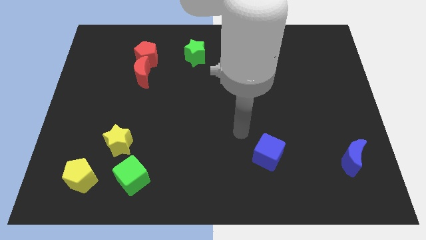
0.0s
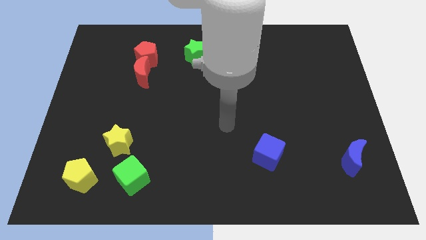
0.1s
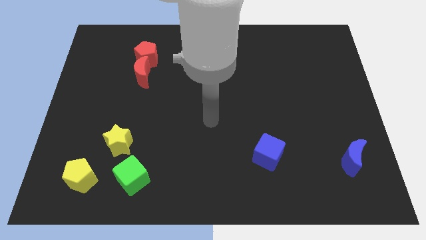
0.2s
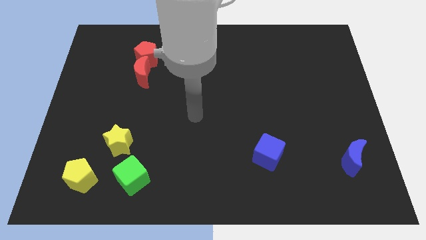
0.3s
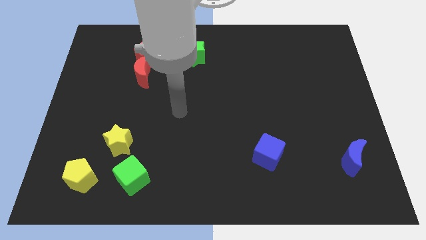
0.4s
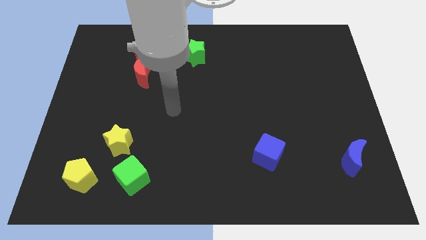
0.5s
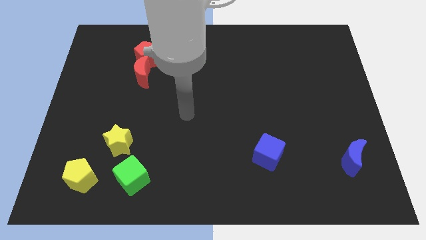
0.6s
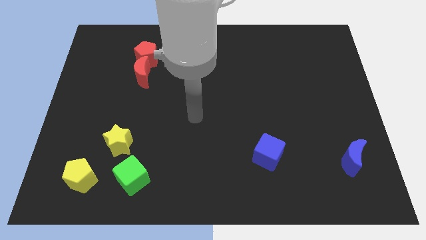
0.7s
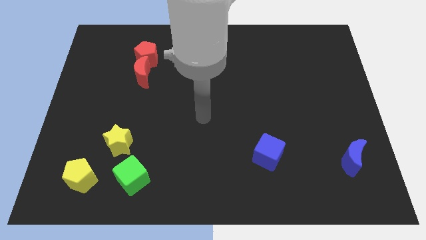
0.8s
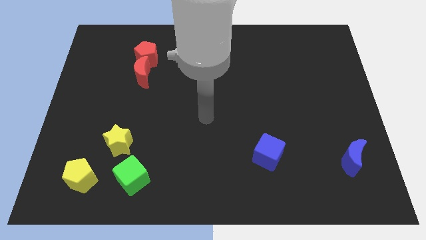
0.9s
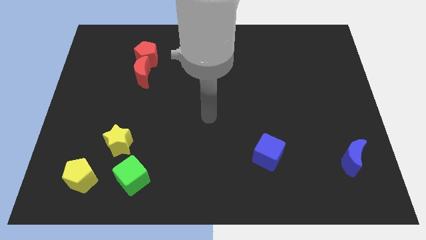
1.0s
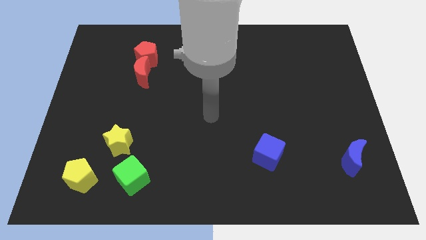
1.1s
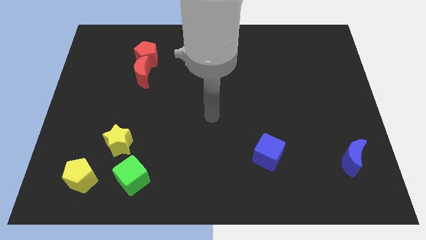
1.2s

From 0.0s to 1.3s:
place your arm at the center of the board

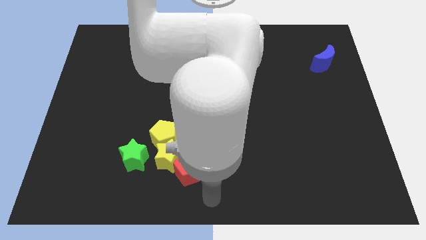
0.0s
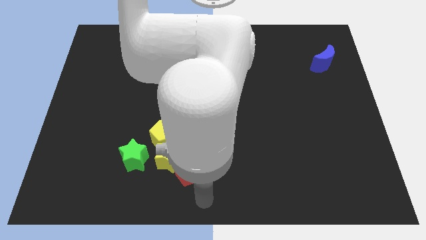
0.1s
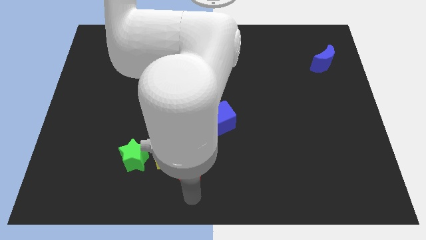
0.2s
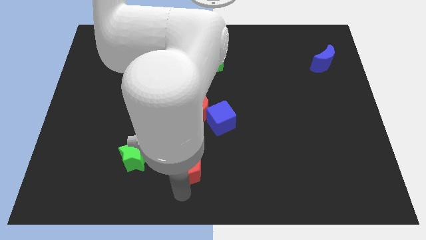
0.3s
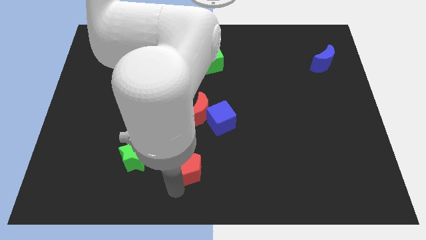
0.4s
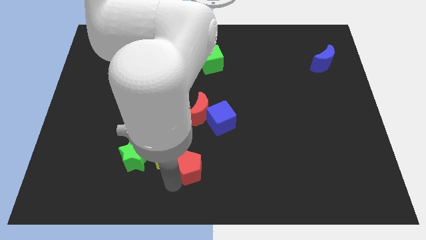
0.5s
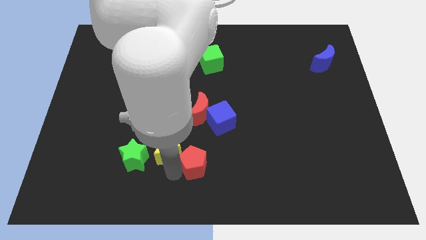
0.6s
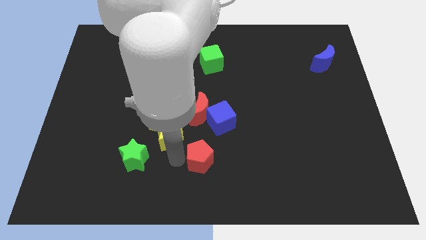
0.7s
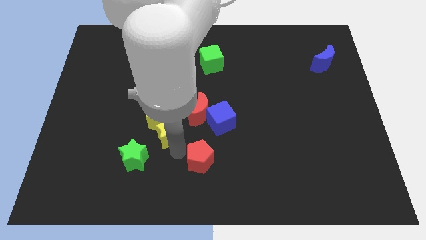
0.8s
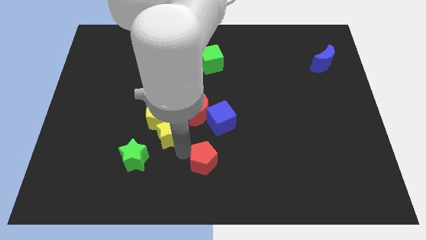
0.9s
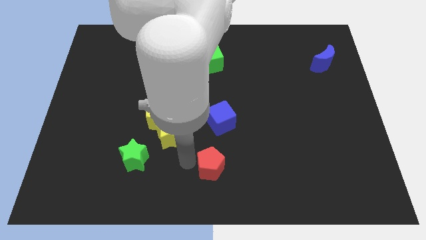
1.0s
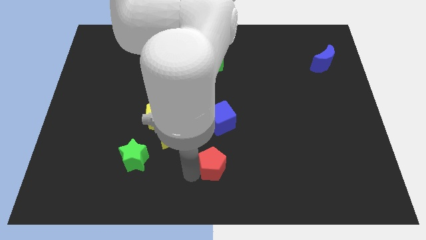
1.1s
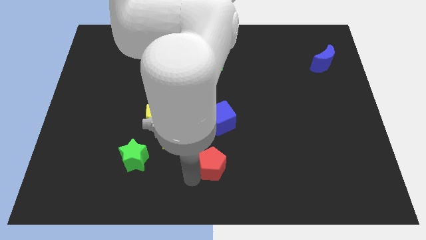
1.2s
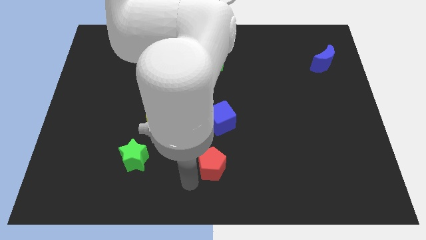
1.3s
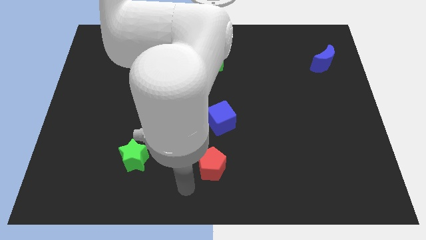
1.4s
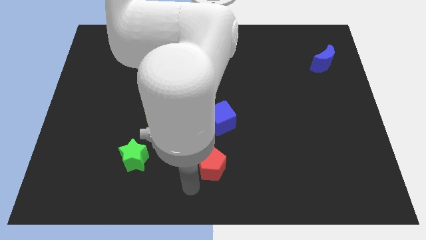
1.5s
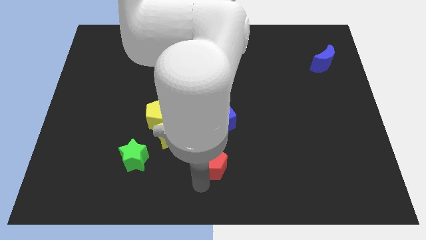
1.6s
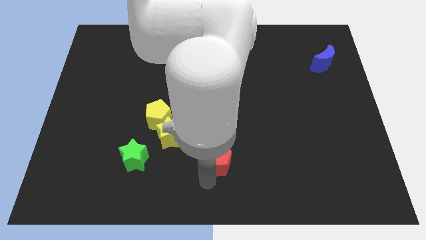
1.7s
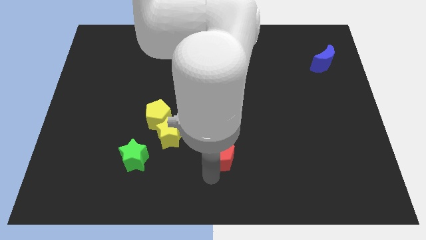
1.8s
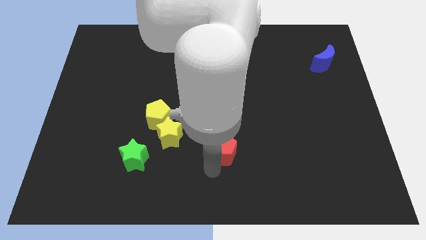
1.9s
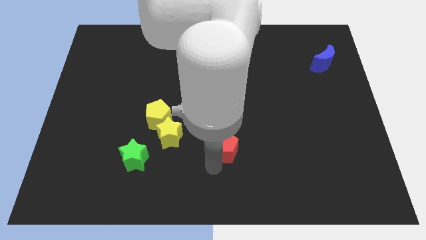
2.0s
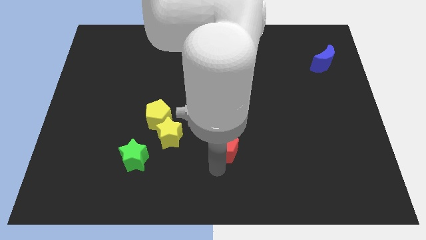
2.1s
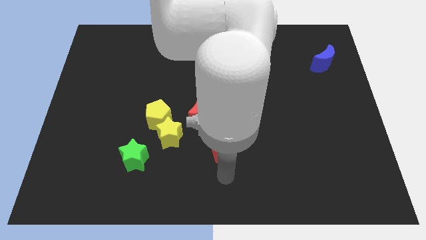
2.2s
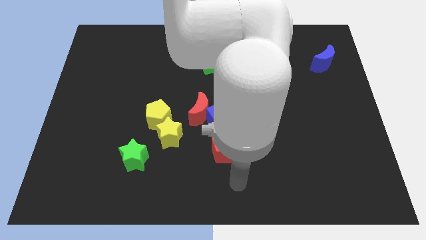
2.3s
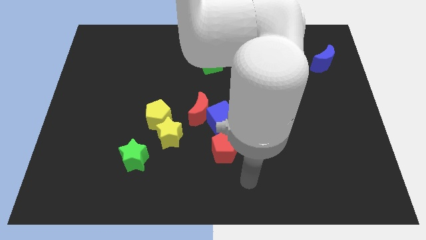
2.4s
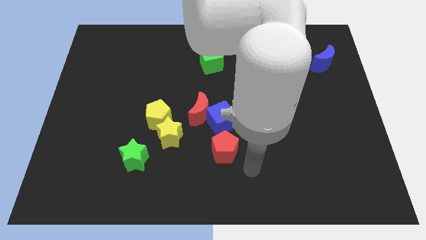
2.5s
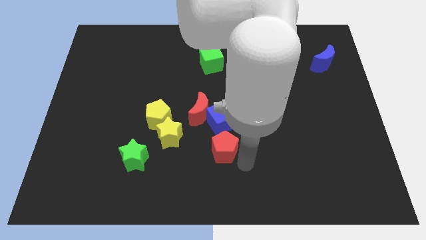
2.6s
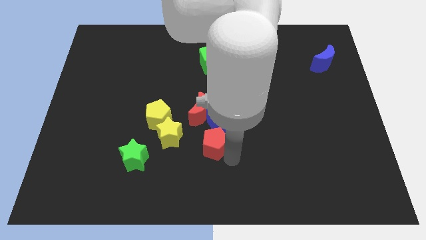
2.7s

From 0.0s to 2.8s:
move red pentagon below blue cube

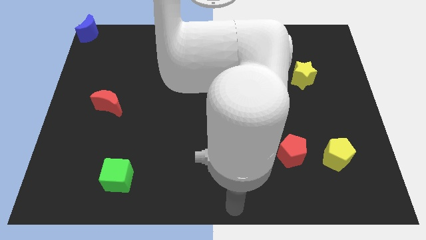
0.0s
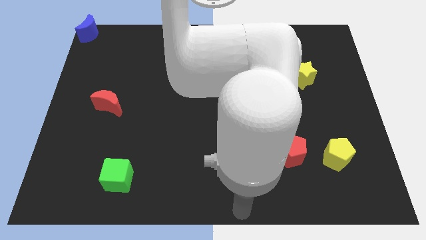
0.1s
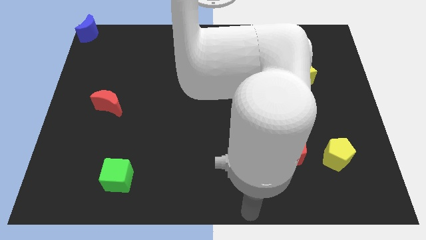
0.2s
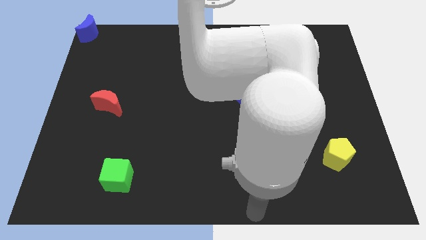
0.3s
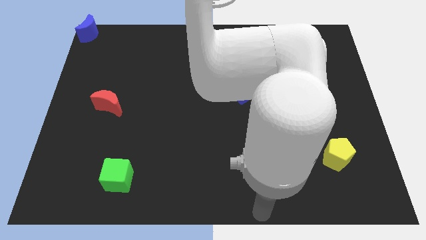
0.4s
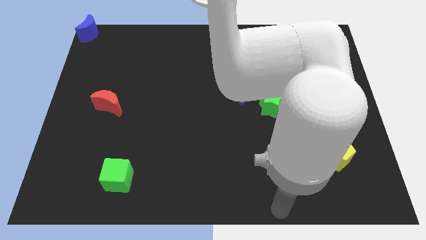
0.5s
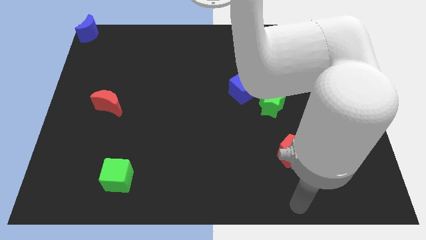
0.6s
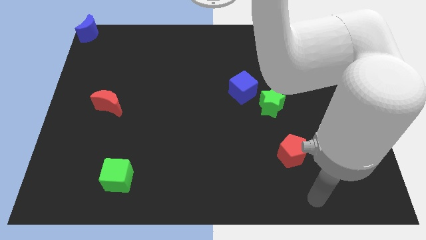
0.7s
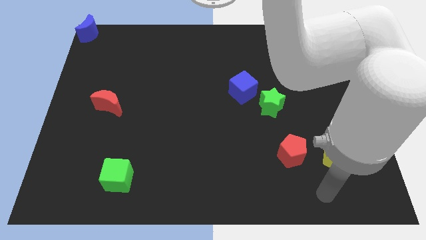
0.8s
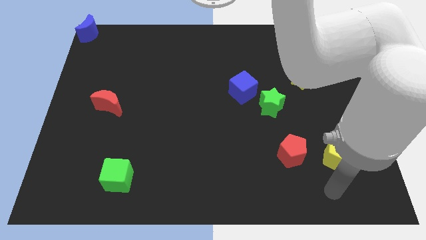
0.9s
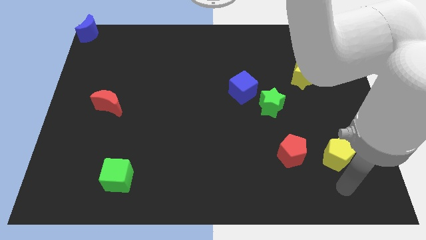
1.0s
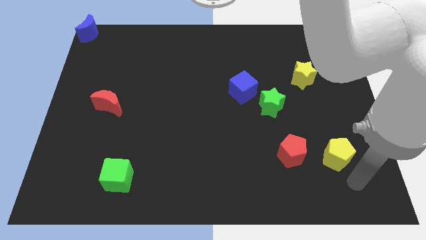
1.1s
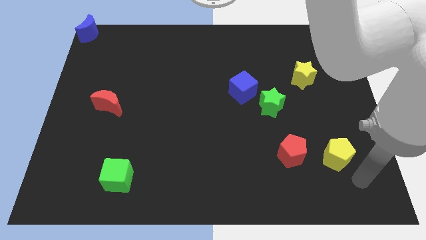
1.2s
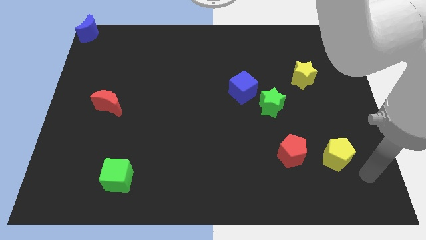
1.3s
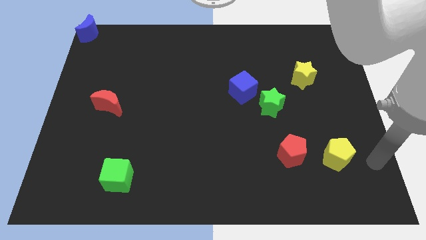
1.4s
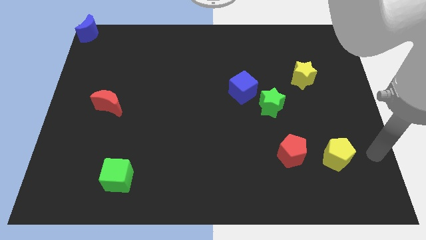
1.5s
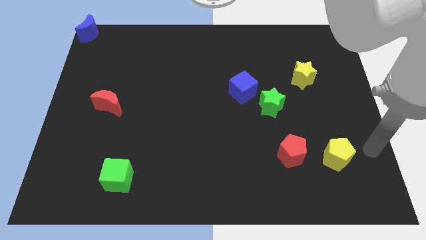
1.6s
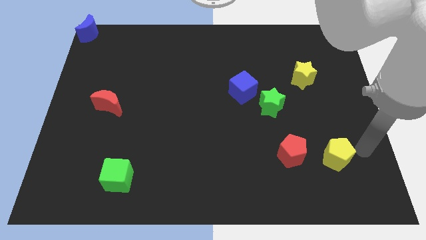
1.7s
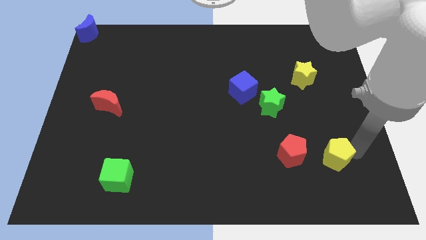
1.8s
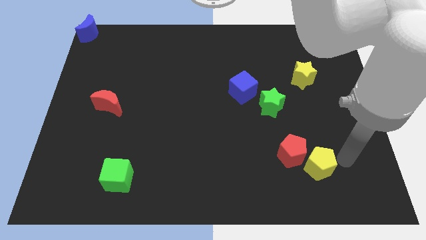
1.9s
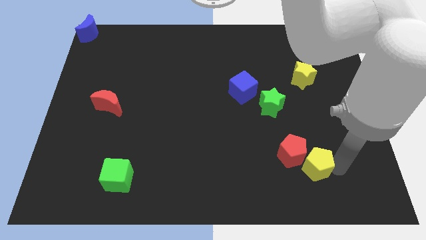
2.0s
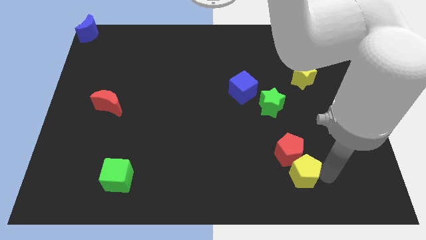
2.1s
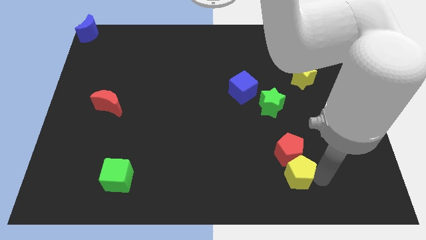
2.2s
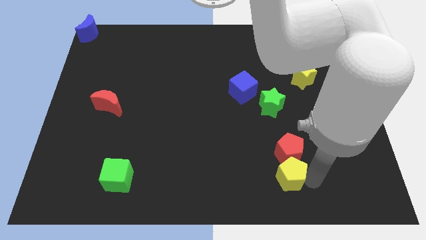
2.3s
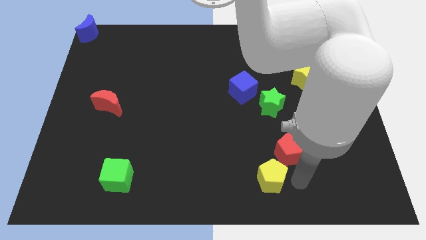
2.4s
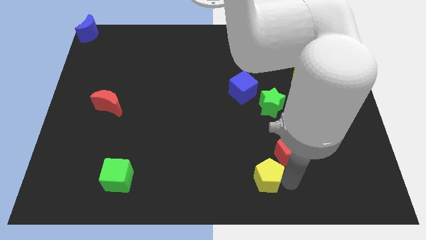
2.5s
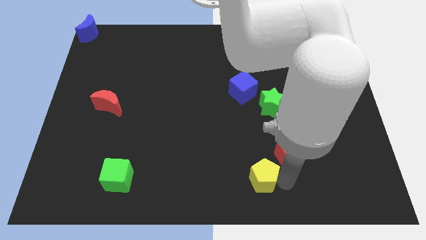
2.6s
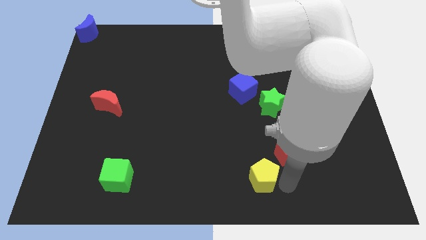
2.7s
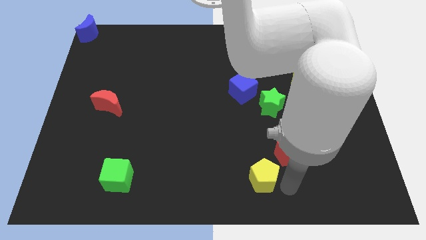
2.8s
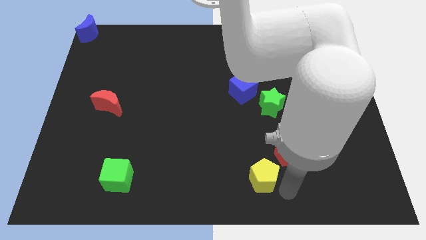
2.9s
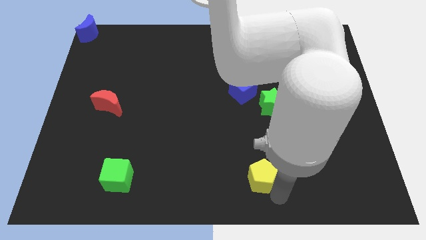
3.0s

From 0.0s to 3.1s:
slide yellow pentagon to the bottom left of red pentagon

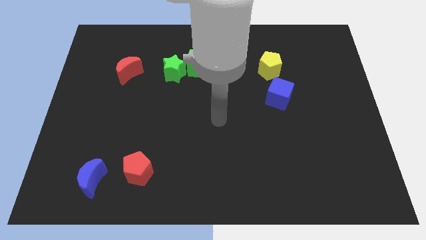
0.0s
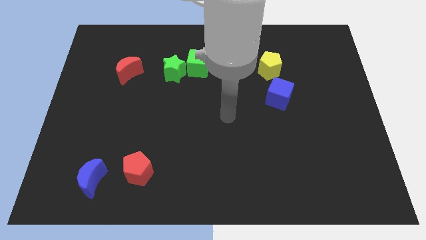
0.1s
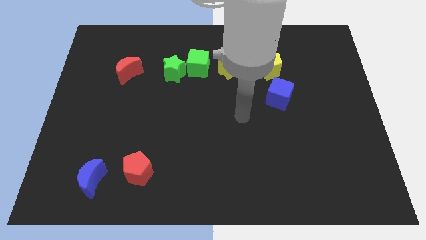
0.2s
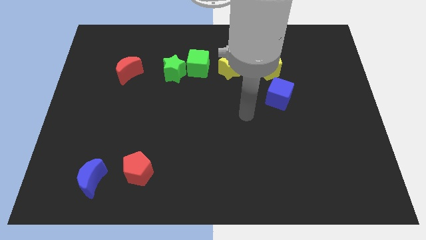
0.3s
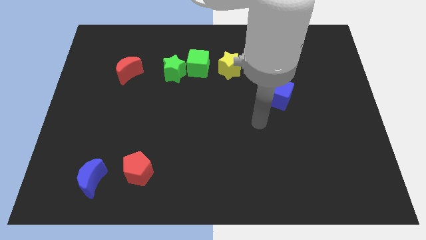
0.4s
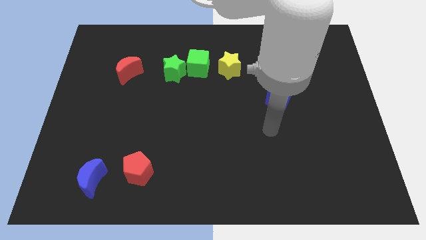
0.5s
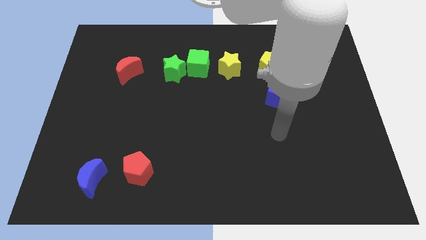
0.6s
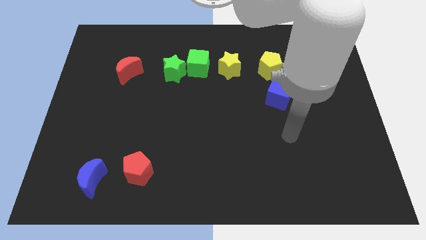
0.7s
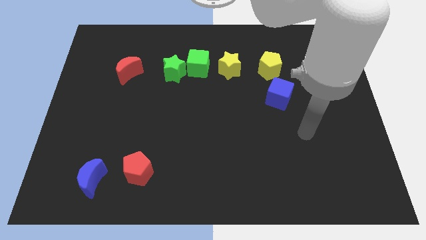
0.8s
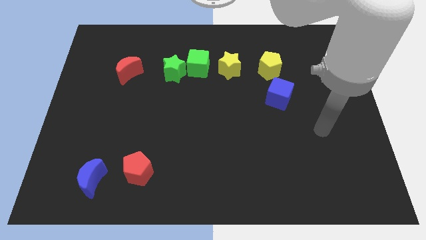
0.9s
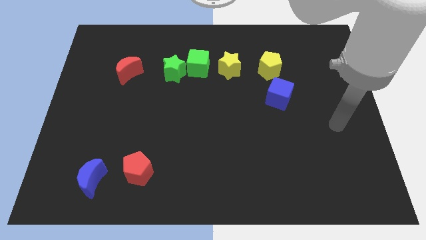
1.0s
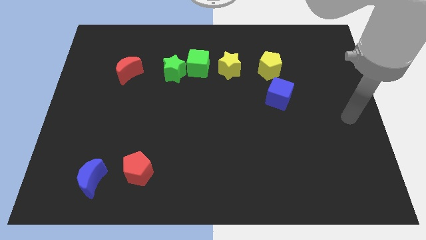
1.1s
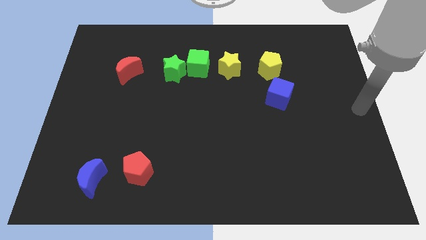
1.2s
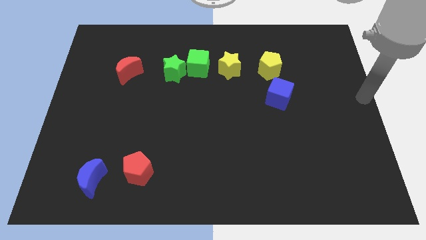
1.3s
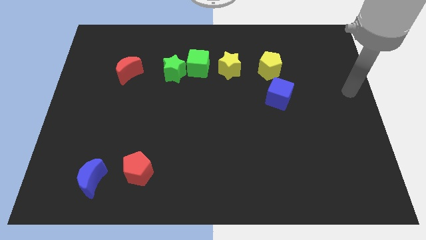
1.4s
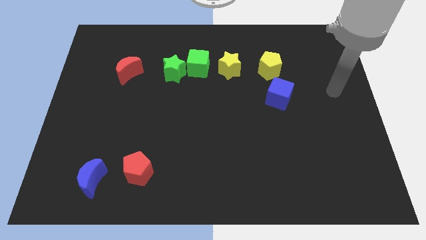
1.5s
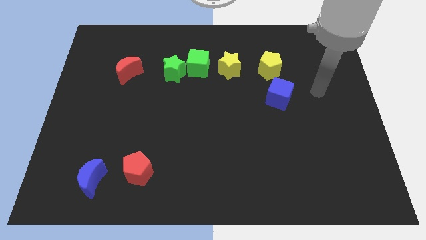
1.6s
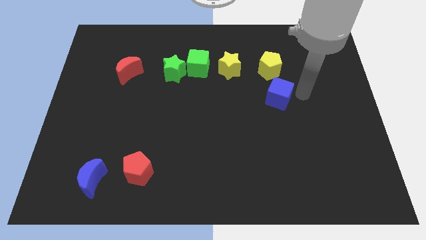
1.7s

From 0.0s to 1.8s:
move your arm to the right side of the blue cube
